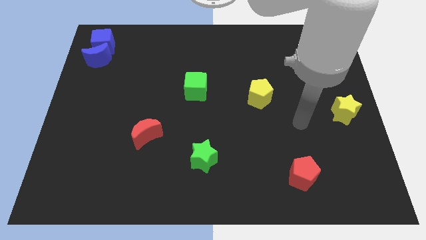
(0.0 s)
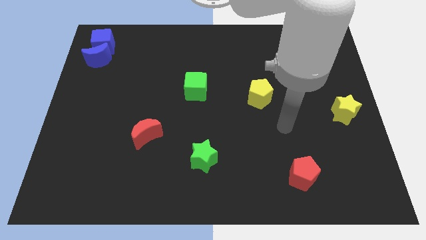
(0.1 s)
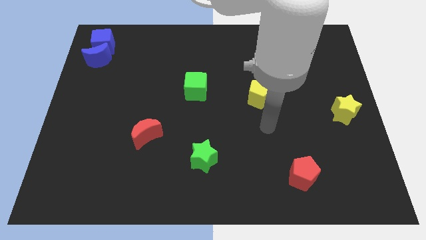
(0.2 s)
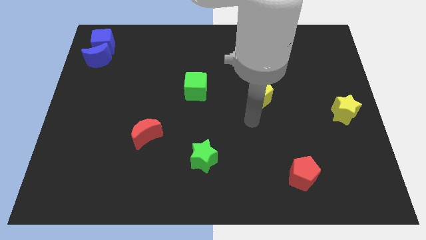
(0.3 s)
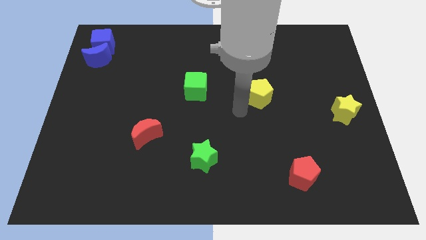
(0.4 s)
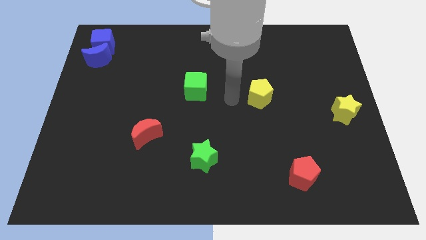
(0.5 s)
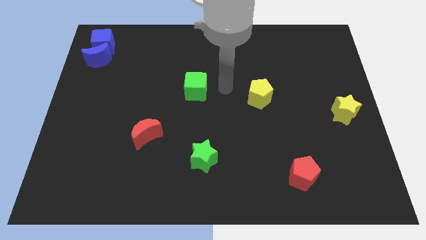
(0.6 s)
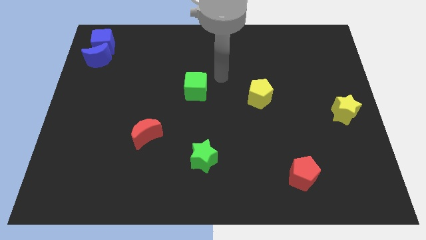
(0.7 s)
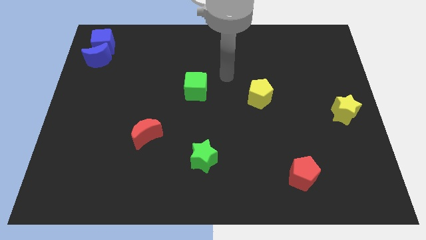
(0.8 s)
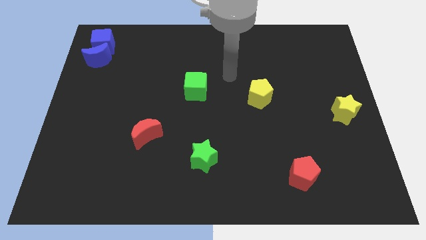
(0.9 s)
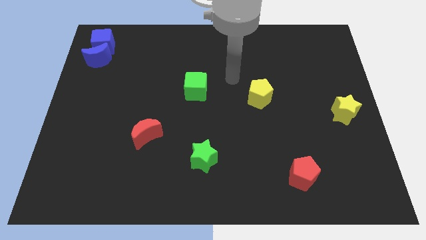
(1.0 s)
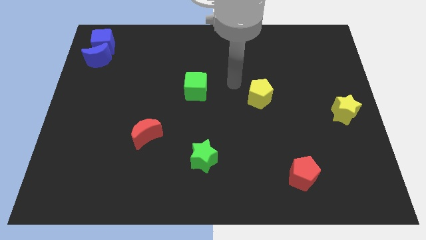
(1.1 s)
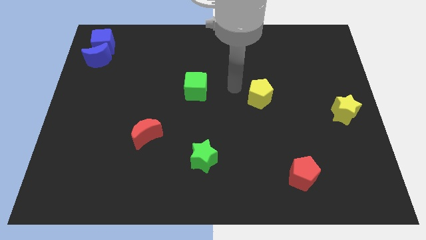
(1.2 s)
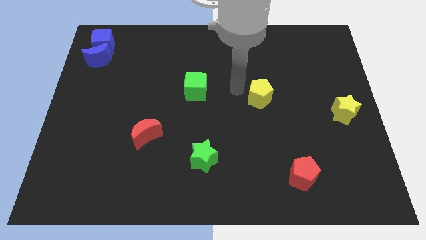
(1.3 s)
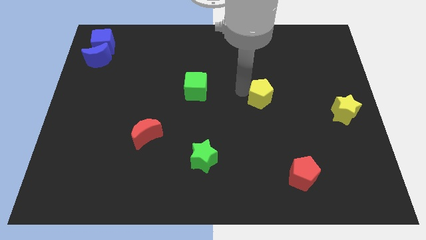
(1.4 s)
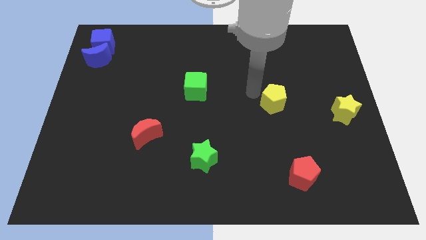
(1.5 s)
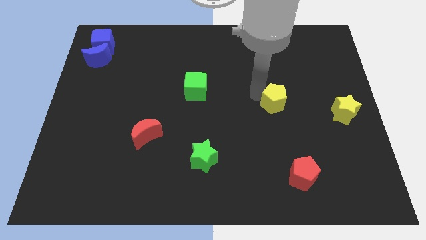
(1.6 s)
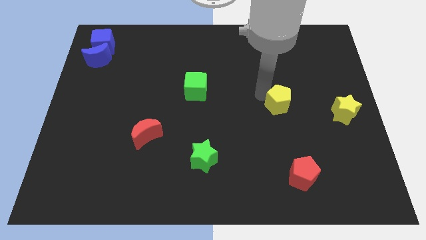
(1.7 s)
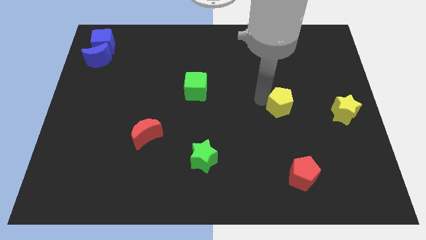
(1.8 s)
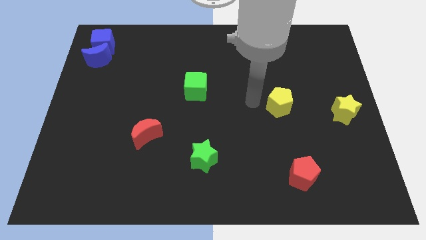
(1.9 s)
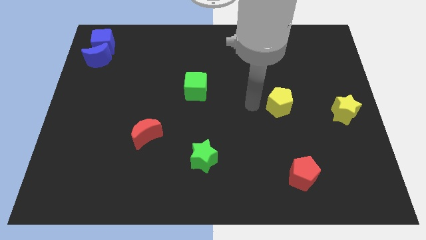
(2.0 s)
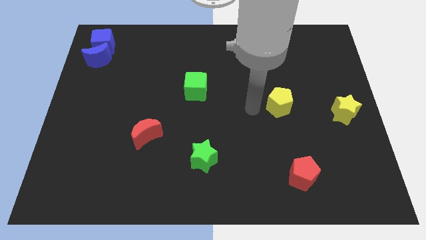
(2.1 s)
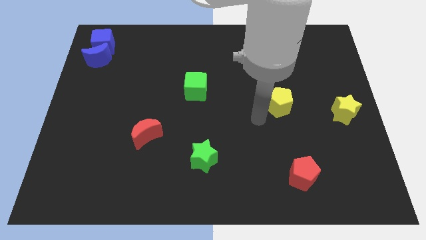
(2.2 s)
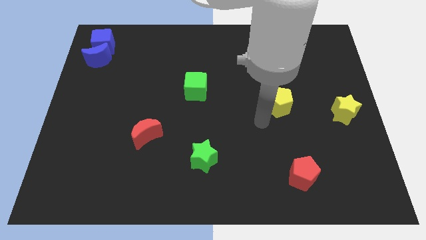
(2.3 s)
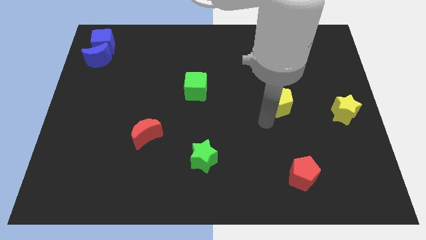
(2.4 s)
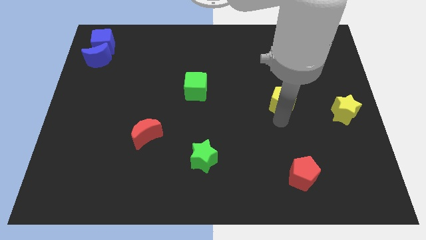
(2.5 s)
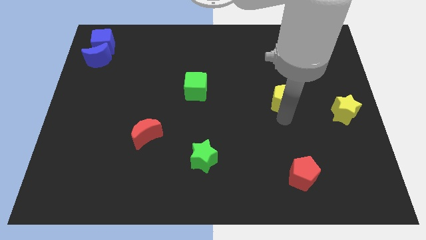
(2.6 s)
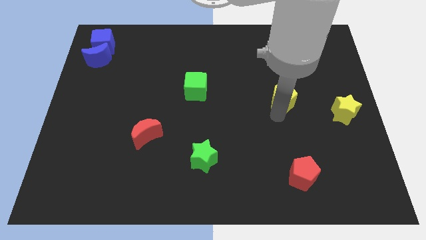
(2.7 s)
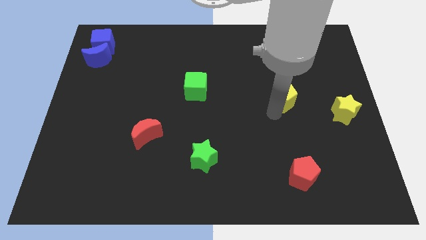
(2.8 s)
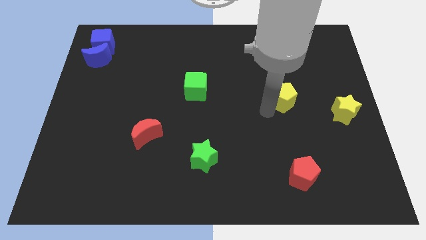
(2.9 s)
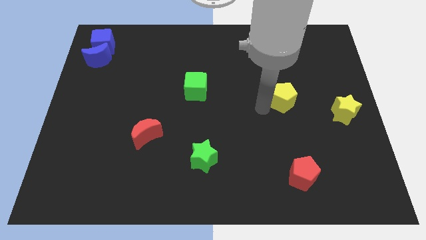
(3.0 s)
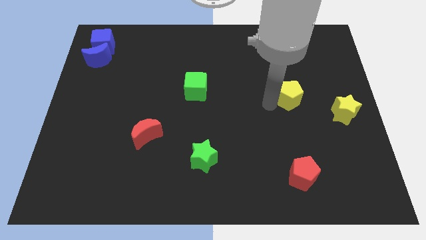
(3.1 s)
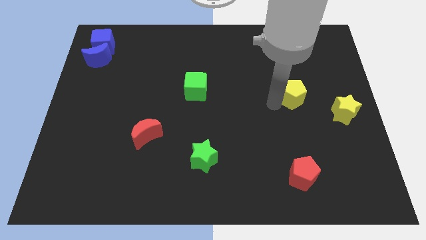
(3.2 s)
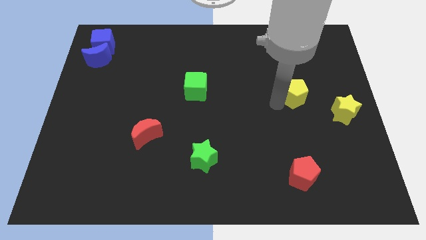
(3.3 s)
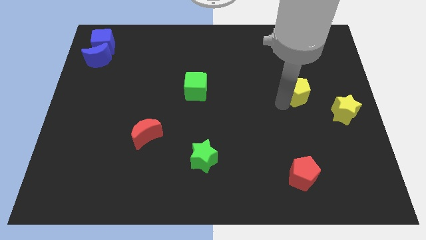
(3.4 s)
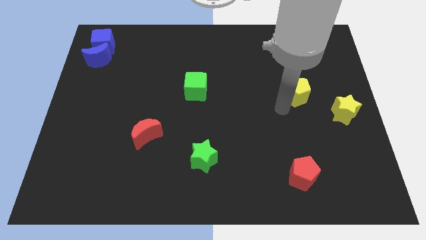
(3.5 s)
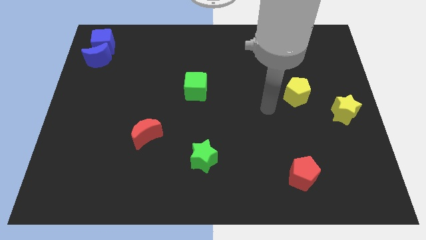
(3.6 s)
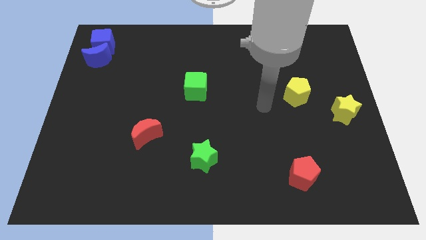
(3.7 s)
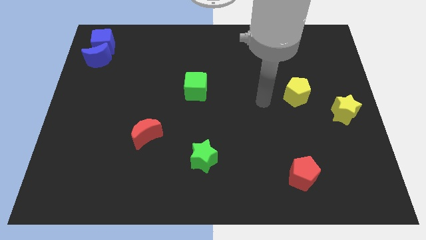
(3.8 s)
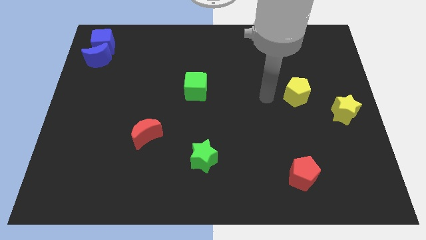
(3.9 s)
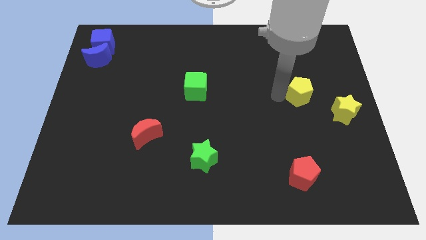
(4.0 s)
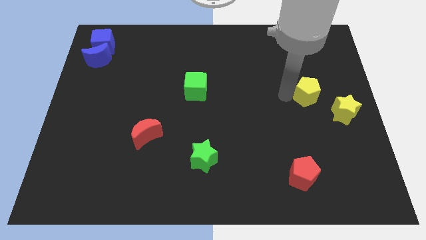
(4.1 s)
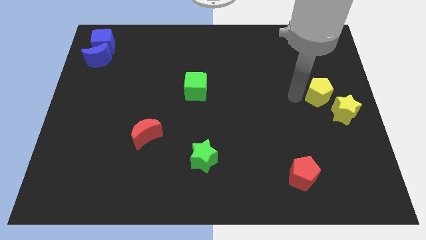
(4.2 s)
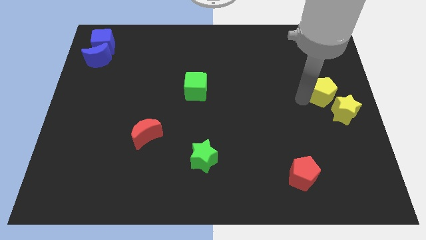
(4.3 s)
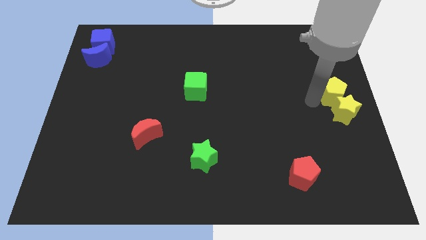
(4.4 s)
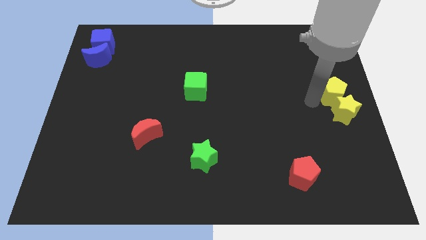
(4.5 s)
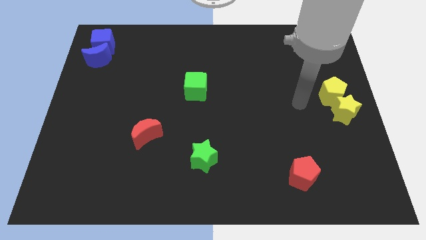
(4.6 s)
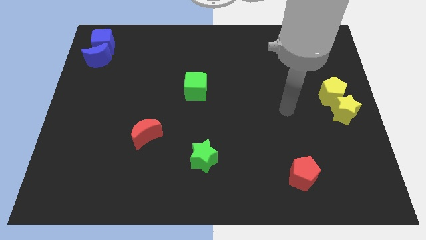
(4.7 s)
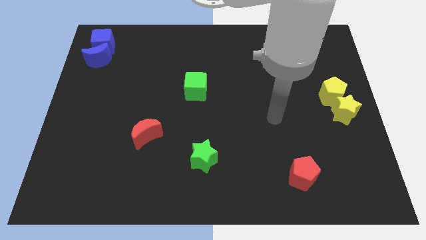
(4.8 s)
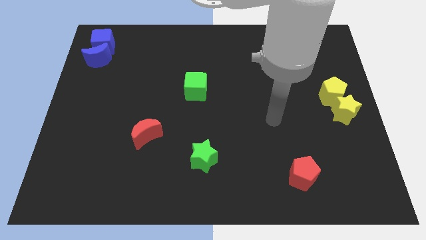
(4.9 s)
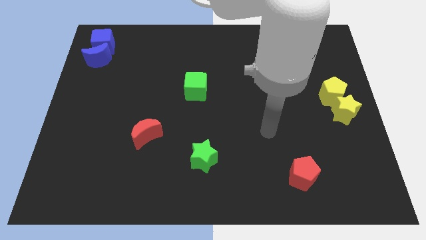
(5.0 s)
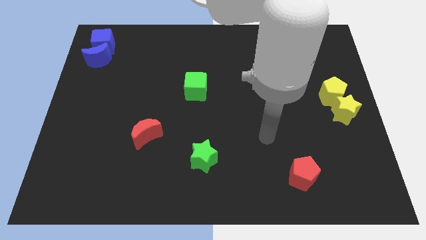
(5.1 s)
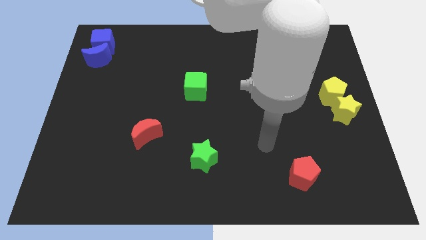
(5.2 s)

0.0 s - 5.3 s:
move the yellow pentagon to top of the yellow star

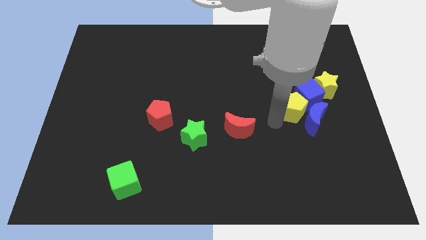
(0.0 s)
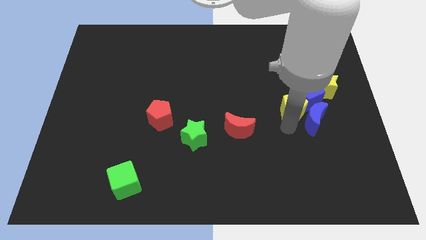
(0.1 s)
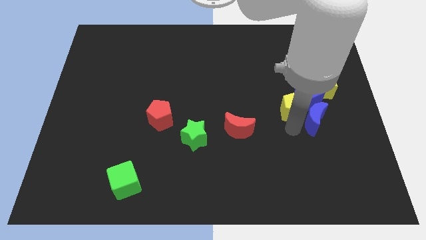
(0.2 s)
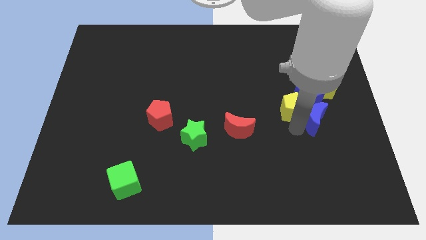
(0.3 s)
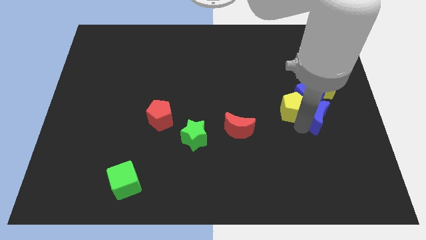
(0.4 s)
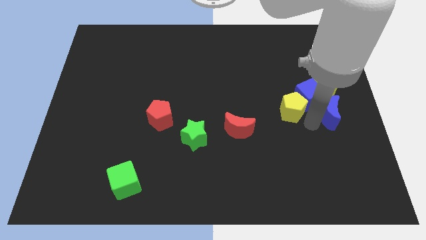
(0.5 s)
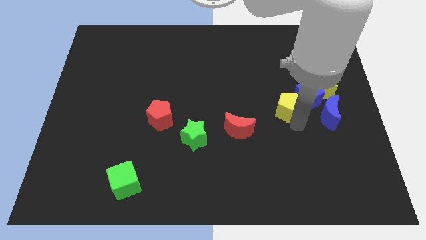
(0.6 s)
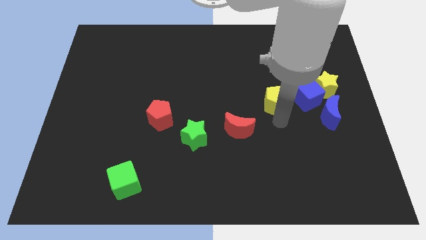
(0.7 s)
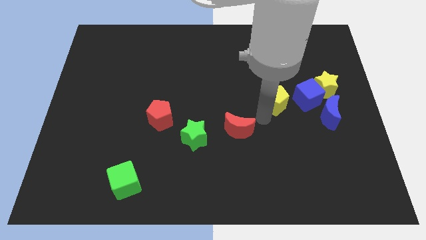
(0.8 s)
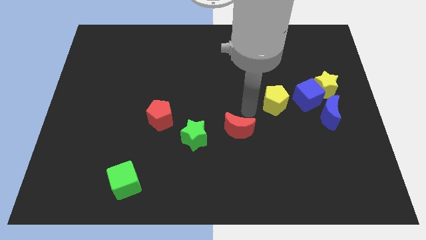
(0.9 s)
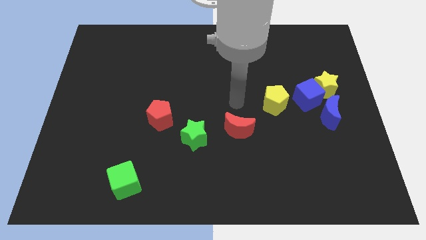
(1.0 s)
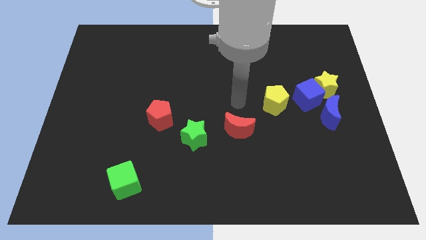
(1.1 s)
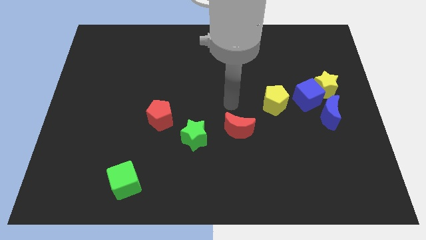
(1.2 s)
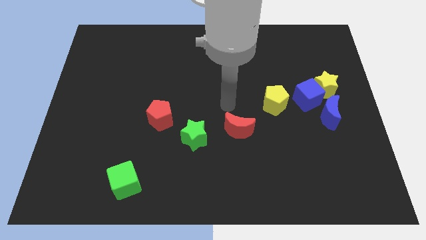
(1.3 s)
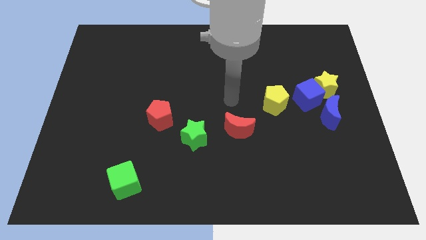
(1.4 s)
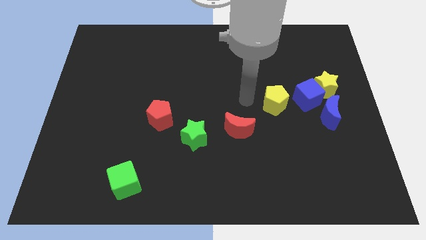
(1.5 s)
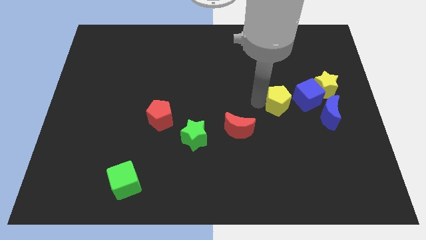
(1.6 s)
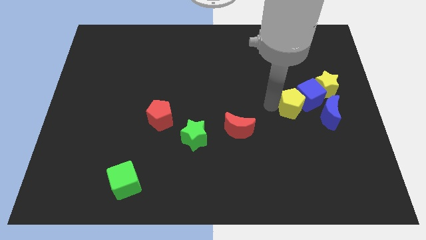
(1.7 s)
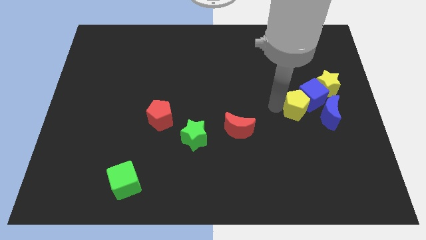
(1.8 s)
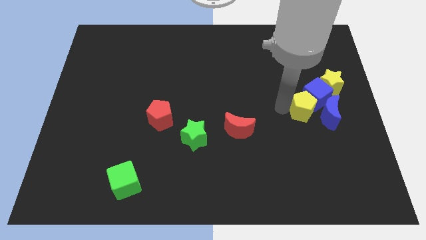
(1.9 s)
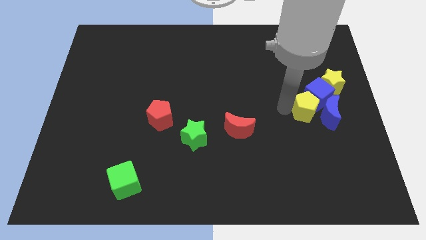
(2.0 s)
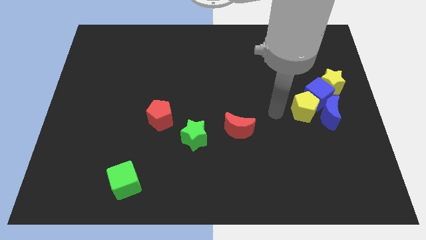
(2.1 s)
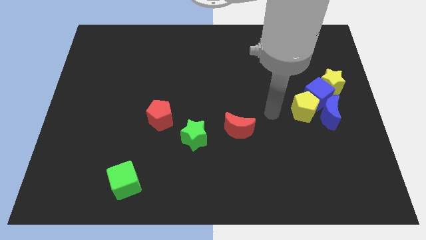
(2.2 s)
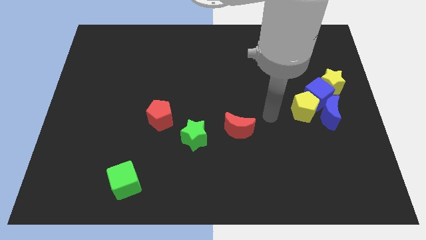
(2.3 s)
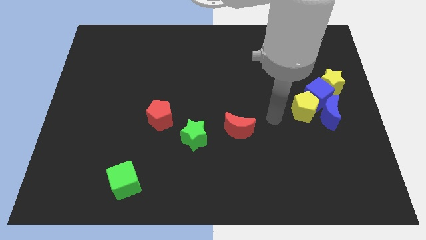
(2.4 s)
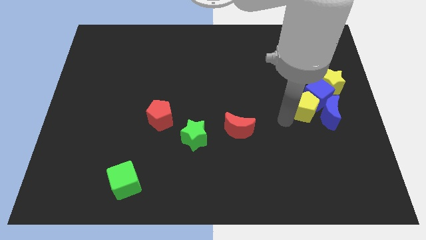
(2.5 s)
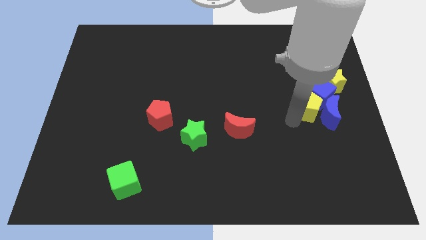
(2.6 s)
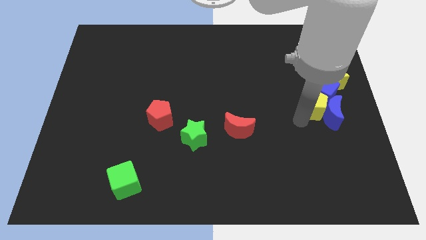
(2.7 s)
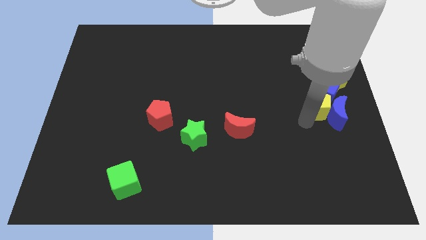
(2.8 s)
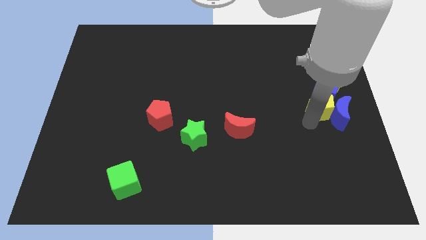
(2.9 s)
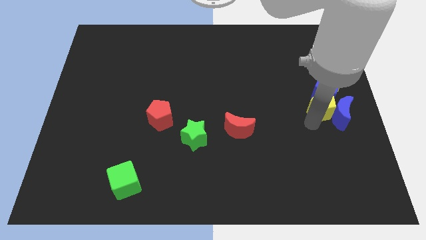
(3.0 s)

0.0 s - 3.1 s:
push yellow pentagon towards the group of blocks

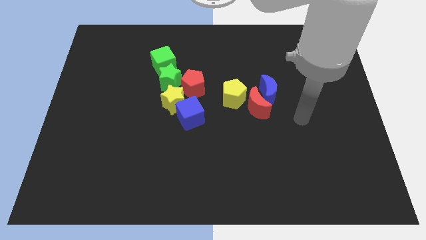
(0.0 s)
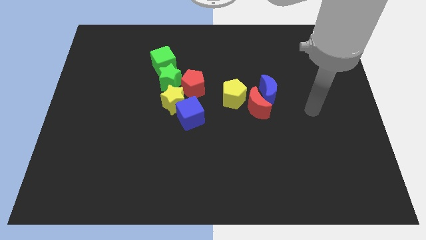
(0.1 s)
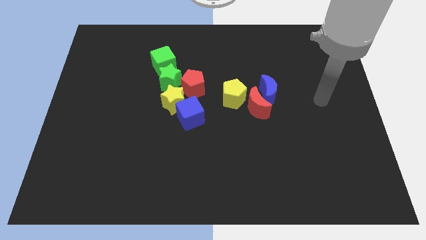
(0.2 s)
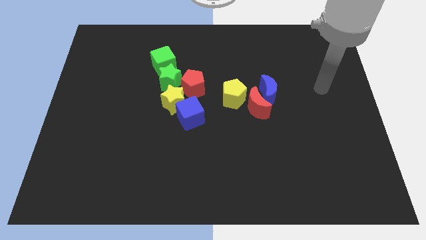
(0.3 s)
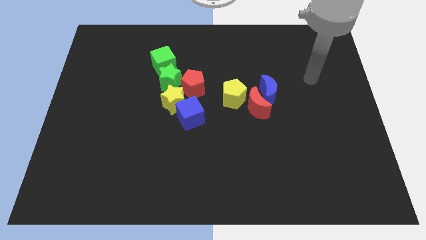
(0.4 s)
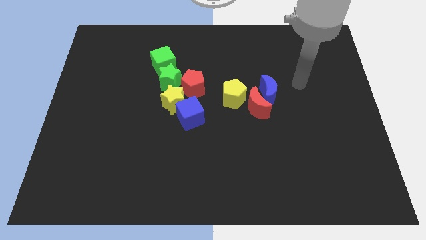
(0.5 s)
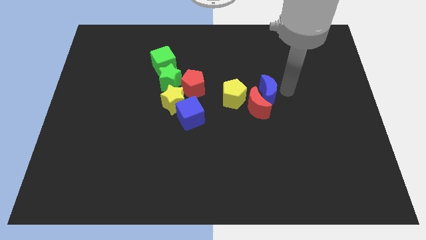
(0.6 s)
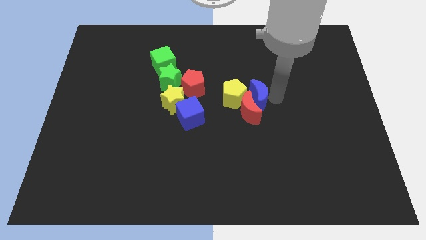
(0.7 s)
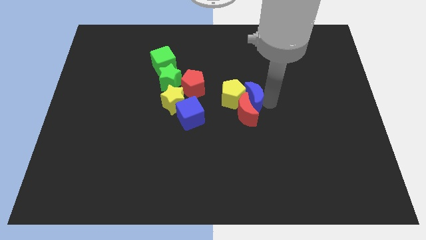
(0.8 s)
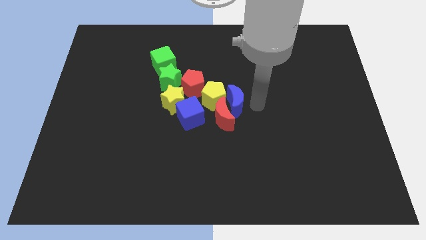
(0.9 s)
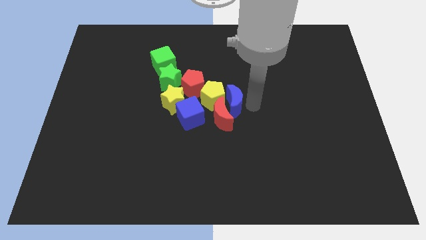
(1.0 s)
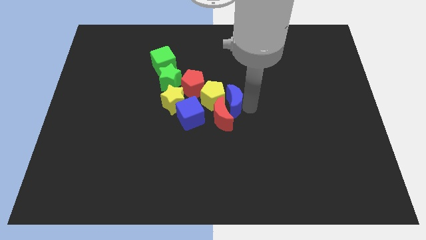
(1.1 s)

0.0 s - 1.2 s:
push the blue crescent into the red crescent
